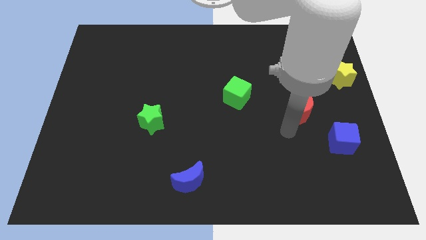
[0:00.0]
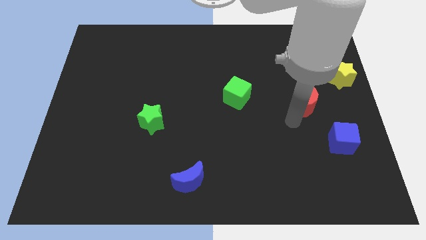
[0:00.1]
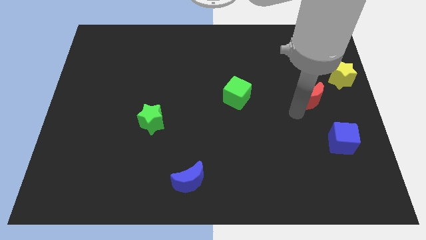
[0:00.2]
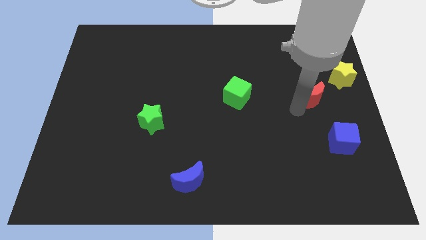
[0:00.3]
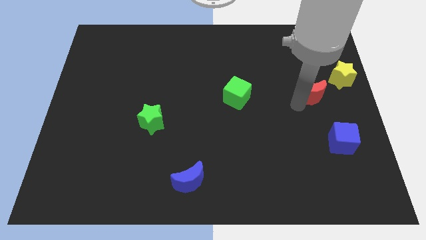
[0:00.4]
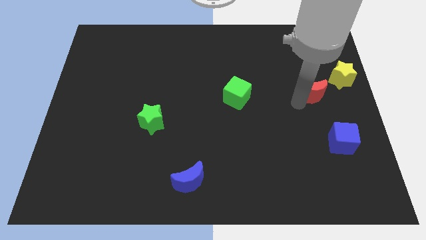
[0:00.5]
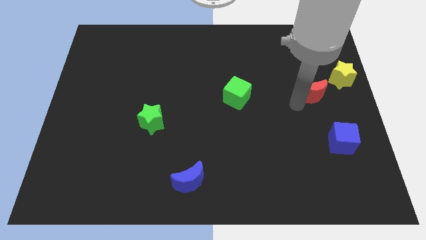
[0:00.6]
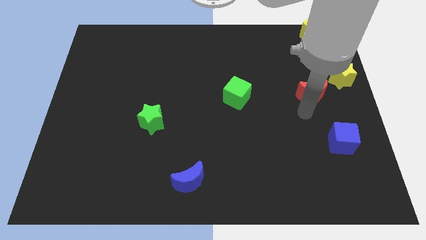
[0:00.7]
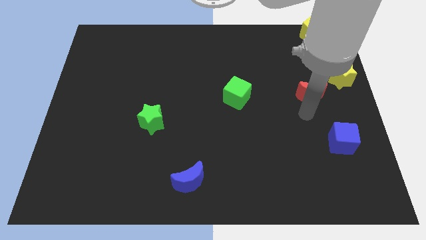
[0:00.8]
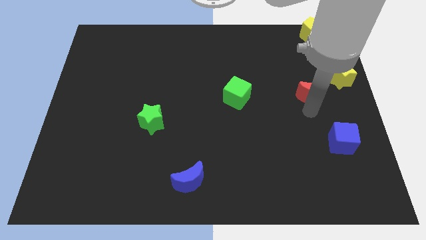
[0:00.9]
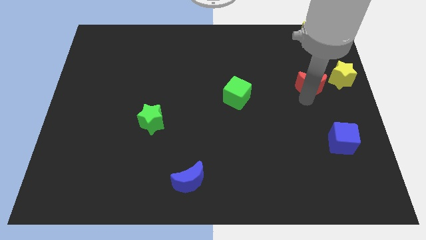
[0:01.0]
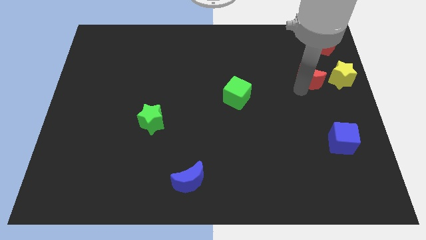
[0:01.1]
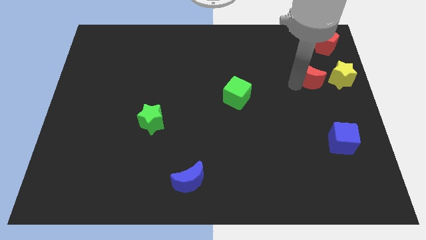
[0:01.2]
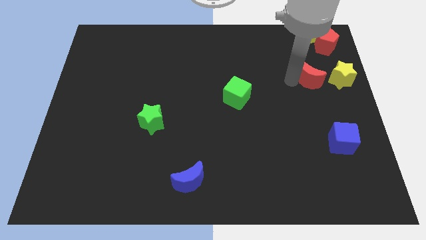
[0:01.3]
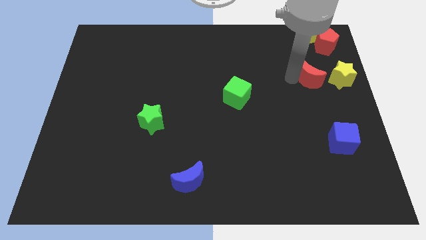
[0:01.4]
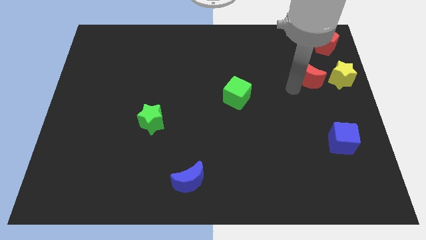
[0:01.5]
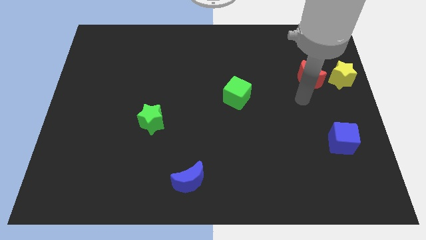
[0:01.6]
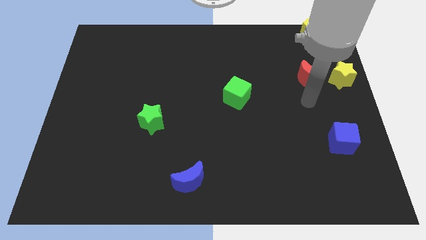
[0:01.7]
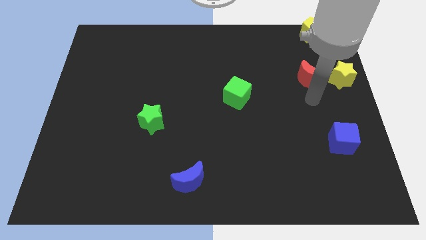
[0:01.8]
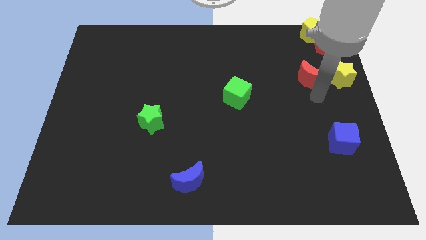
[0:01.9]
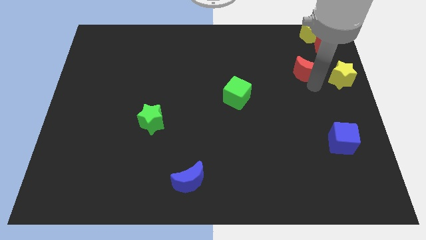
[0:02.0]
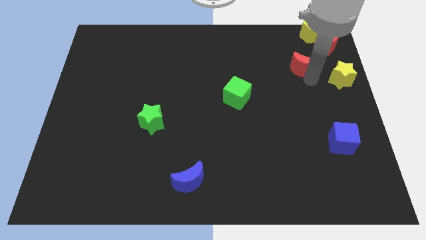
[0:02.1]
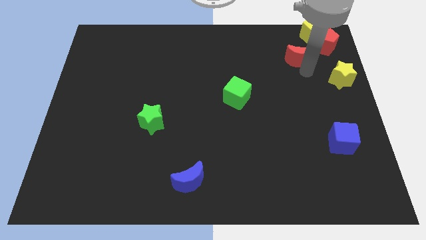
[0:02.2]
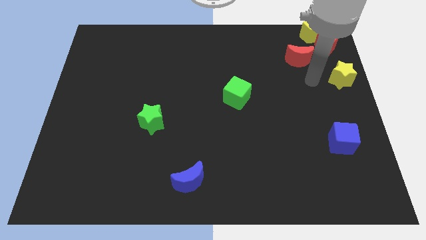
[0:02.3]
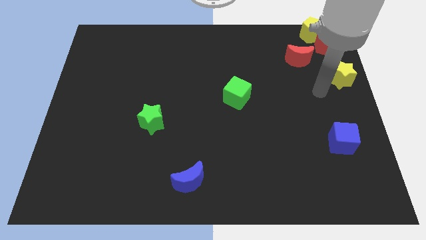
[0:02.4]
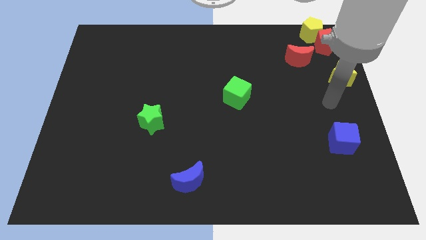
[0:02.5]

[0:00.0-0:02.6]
move the red crescent close to red pentagon

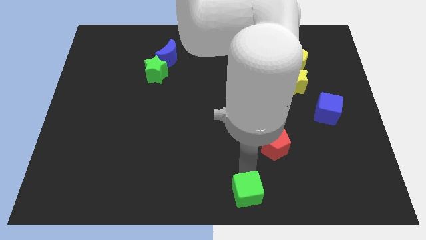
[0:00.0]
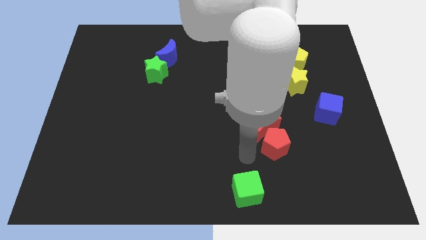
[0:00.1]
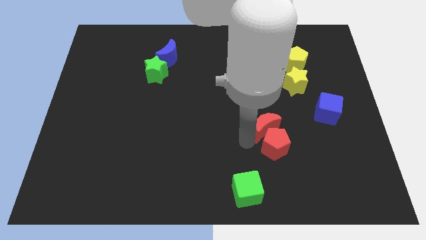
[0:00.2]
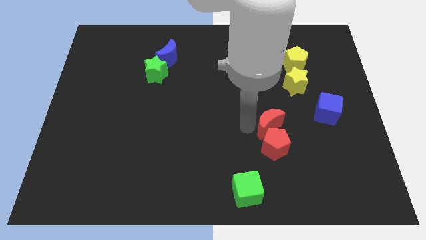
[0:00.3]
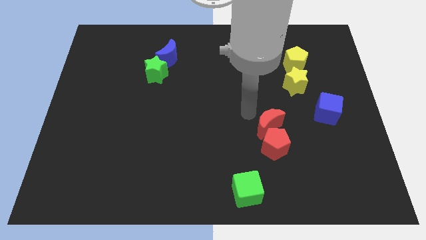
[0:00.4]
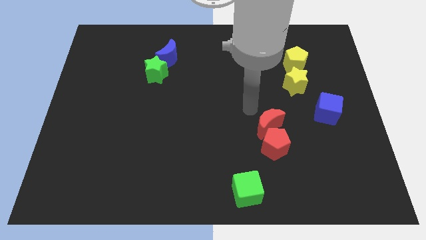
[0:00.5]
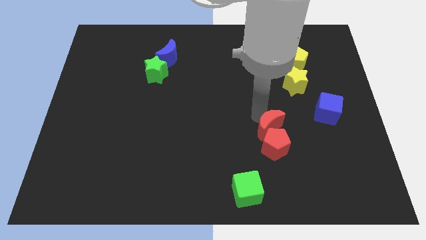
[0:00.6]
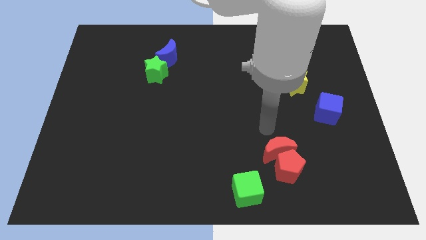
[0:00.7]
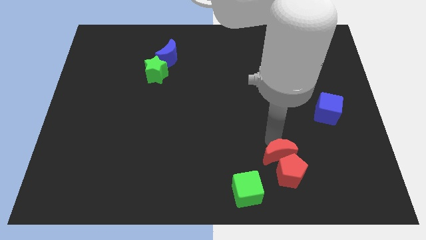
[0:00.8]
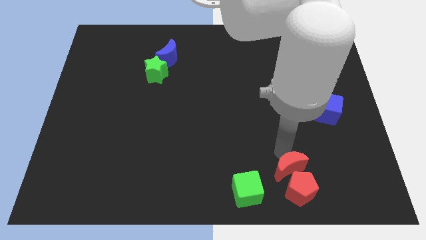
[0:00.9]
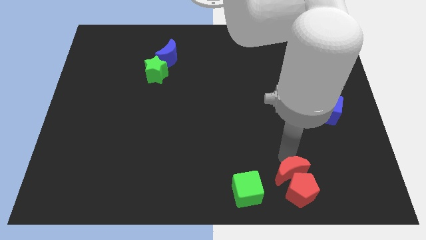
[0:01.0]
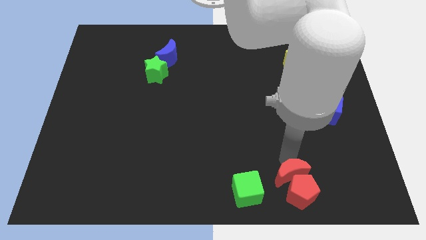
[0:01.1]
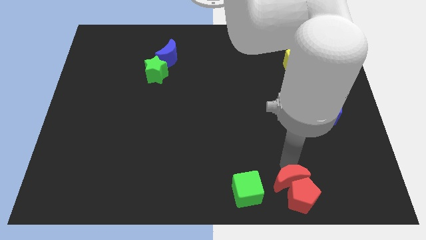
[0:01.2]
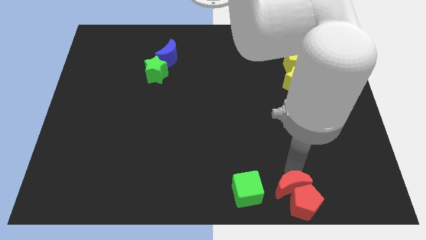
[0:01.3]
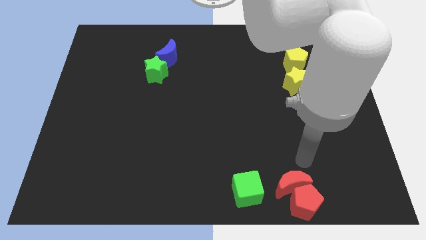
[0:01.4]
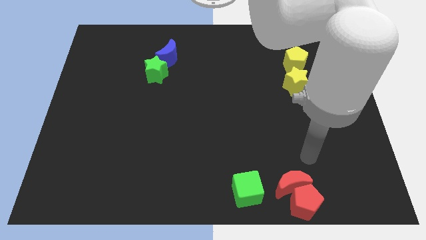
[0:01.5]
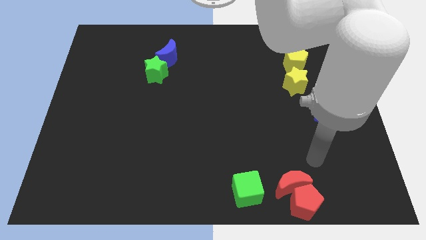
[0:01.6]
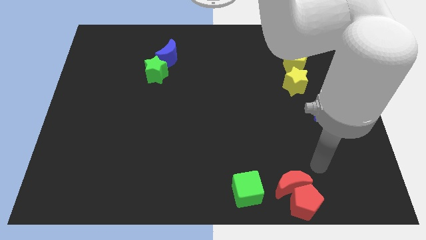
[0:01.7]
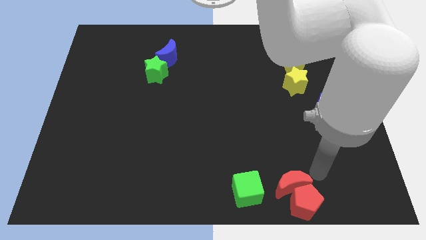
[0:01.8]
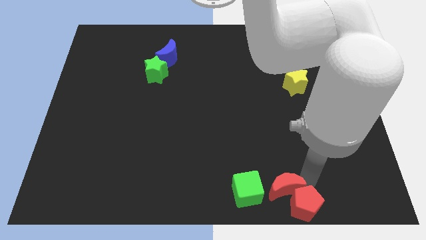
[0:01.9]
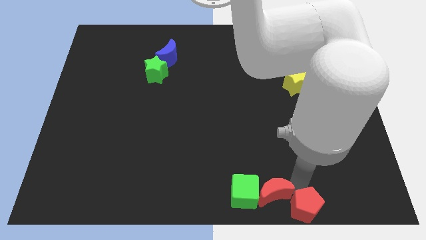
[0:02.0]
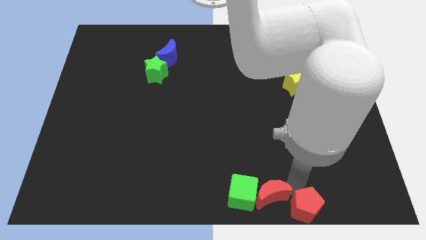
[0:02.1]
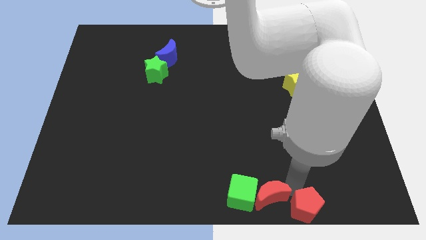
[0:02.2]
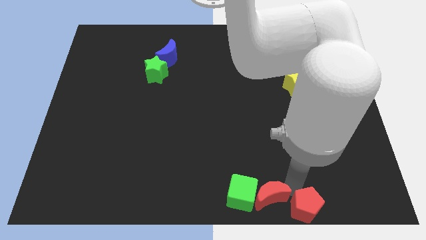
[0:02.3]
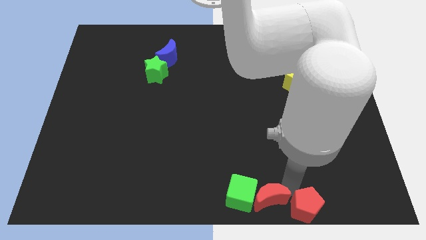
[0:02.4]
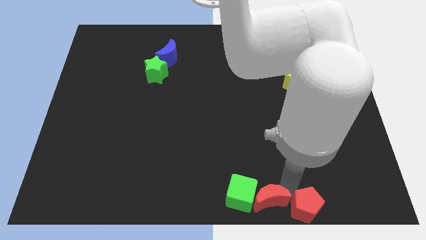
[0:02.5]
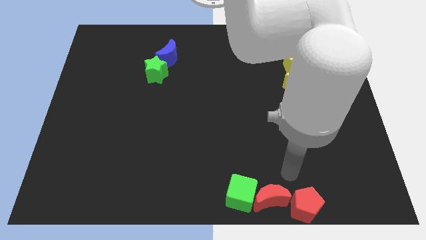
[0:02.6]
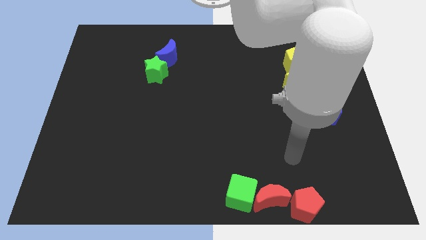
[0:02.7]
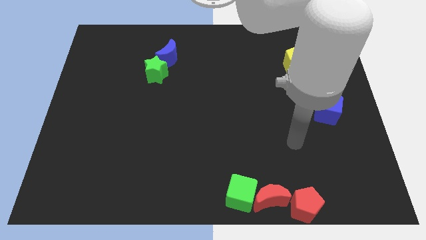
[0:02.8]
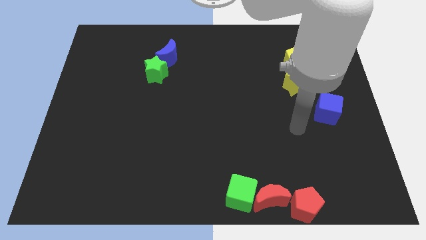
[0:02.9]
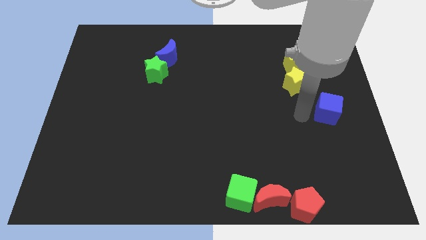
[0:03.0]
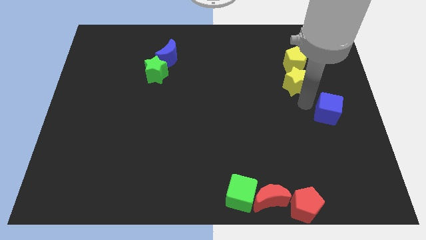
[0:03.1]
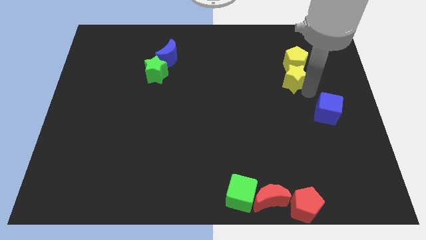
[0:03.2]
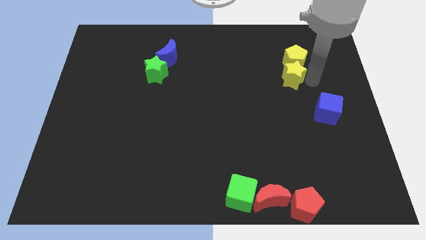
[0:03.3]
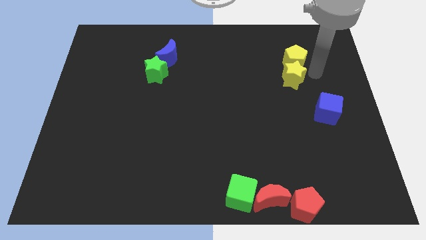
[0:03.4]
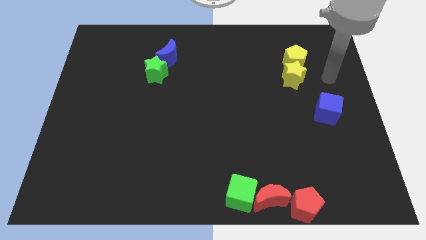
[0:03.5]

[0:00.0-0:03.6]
push the red blocks towards right side of the green cube

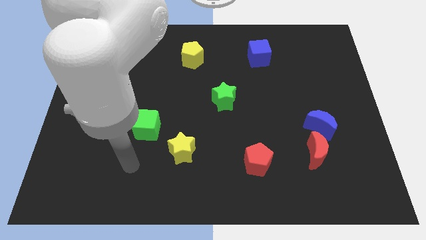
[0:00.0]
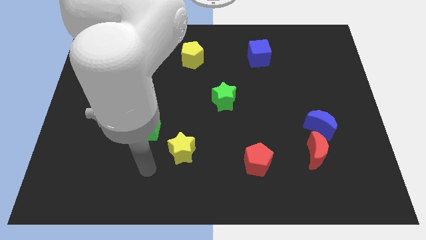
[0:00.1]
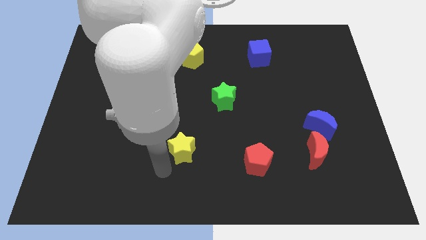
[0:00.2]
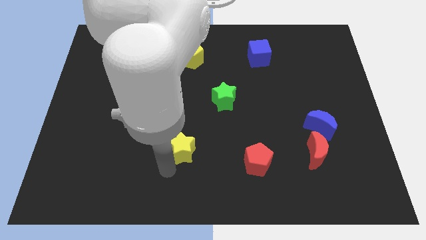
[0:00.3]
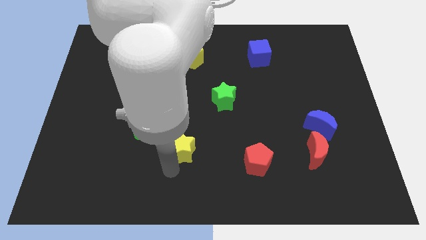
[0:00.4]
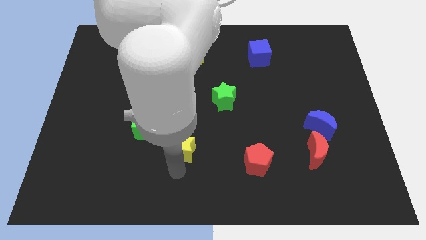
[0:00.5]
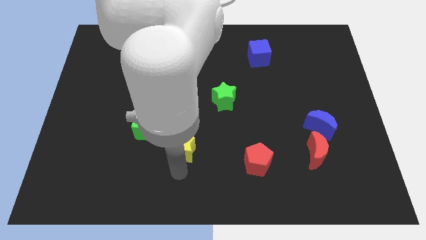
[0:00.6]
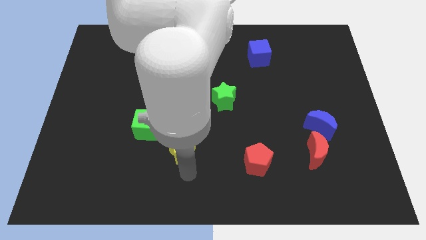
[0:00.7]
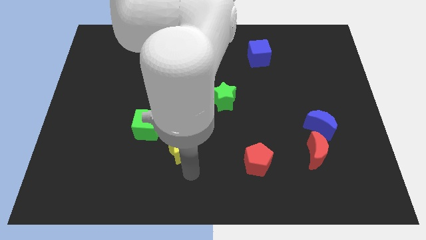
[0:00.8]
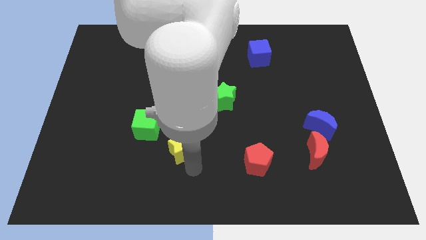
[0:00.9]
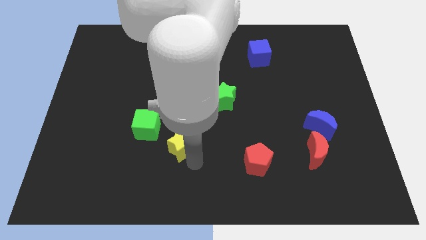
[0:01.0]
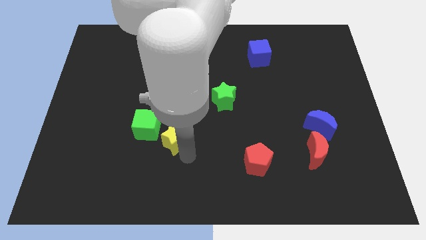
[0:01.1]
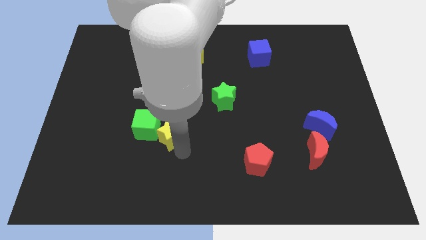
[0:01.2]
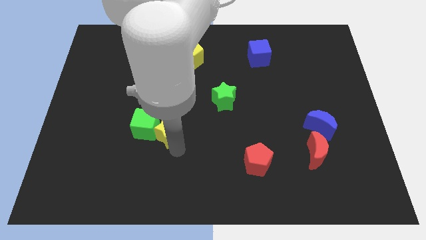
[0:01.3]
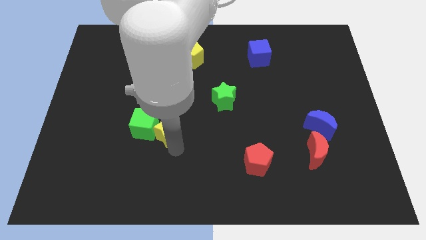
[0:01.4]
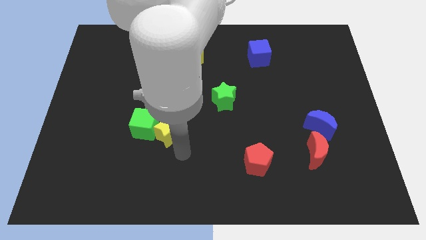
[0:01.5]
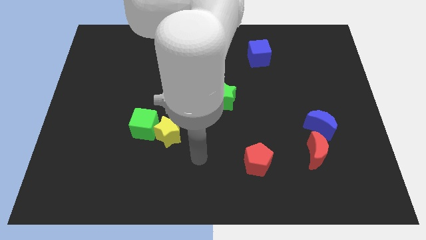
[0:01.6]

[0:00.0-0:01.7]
push the yellow star into the green cube

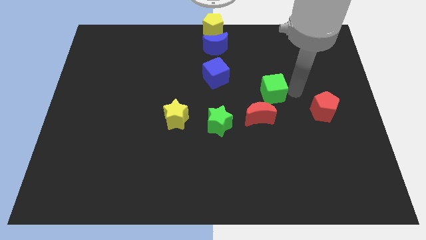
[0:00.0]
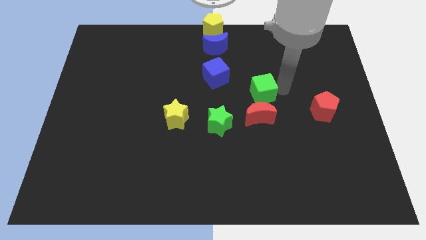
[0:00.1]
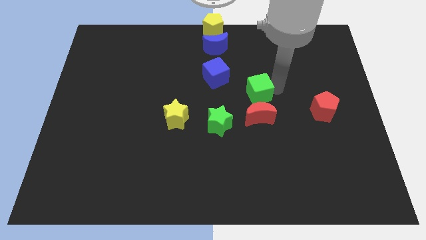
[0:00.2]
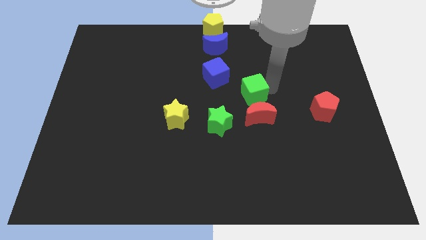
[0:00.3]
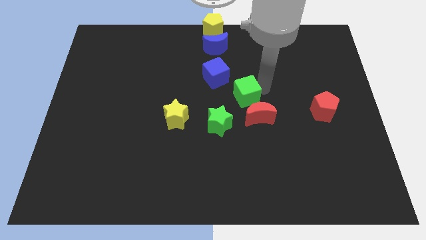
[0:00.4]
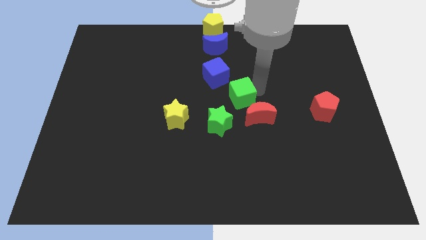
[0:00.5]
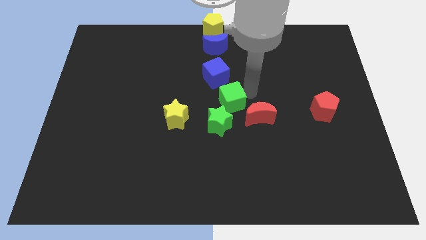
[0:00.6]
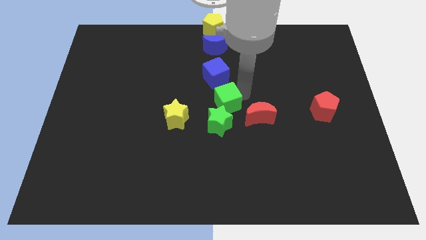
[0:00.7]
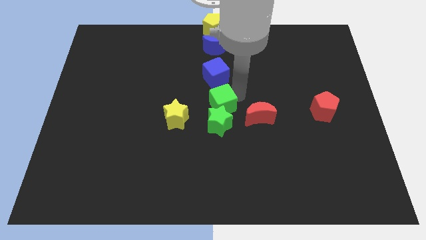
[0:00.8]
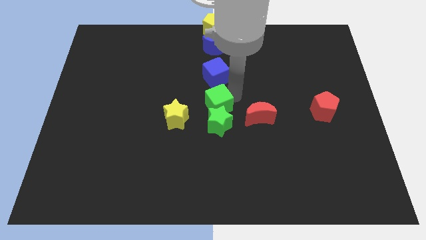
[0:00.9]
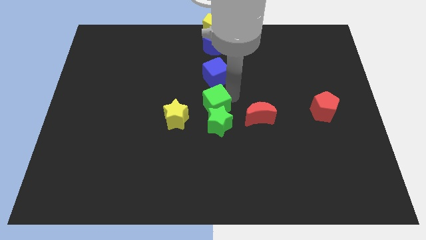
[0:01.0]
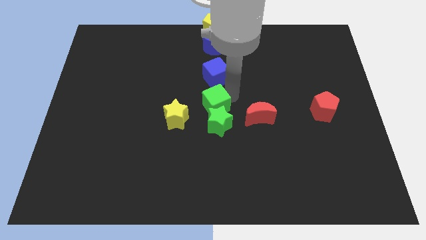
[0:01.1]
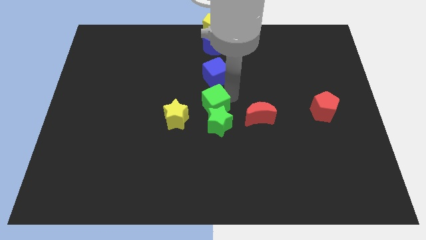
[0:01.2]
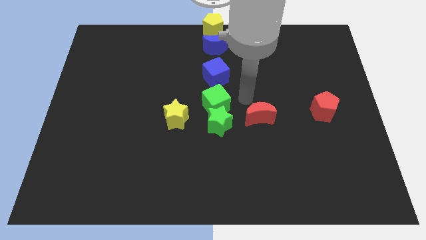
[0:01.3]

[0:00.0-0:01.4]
move the green cube to the top of the green star
